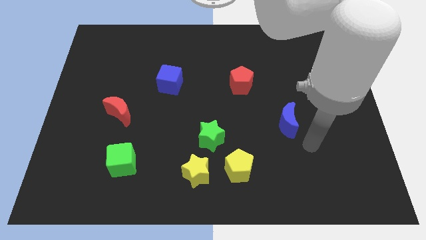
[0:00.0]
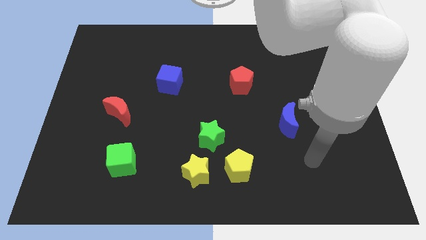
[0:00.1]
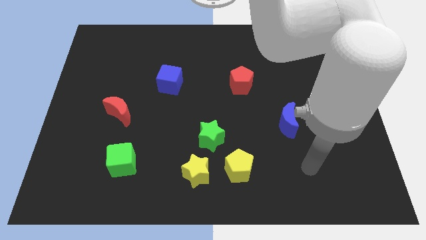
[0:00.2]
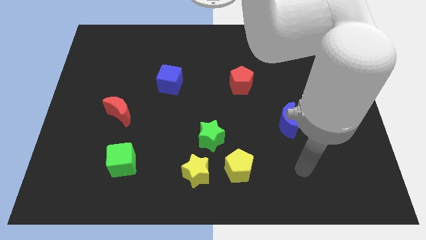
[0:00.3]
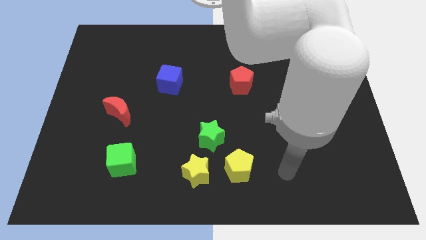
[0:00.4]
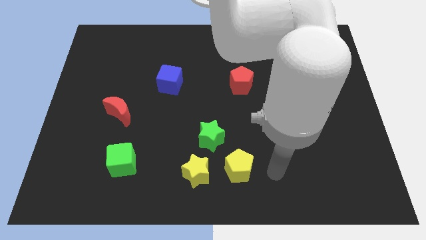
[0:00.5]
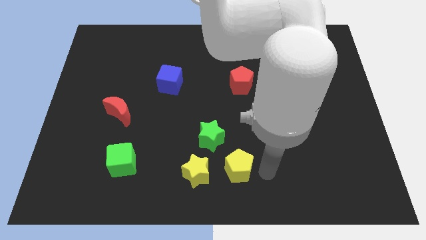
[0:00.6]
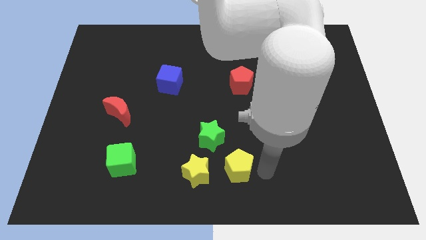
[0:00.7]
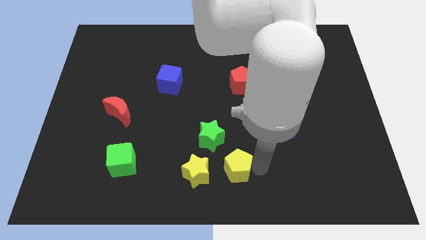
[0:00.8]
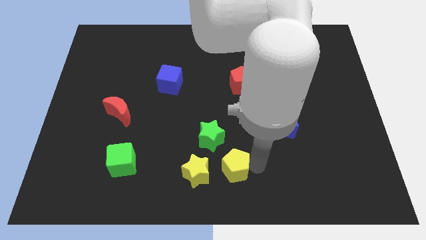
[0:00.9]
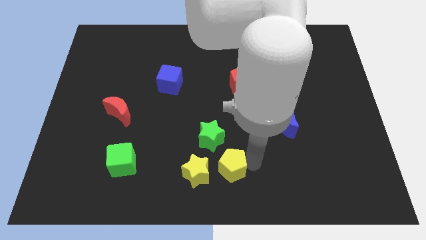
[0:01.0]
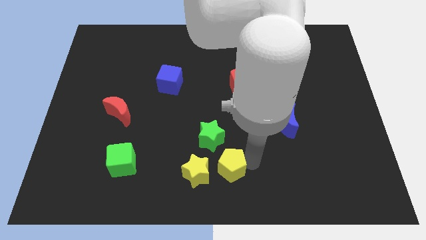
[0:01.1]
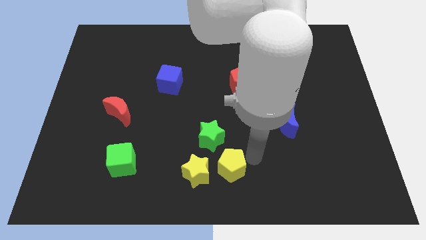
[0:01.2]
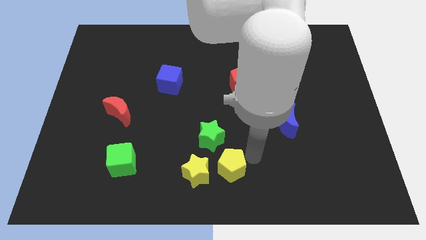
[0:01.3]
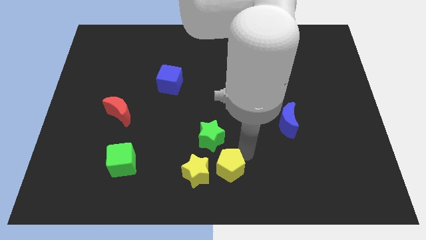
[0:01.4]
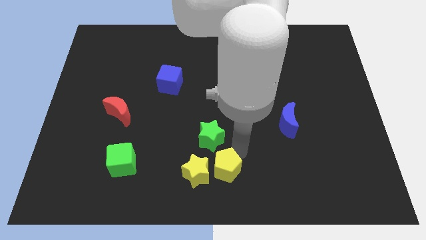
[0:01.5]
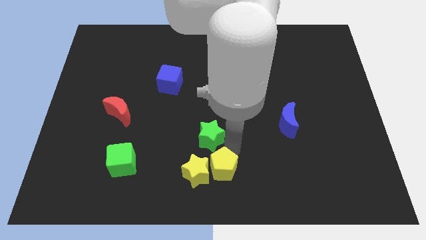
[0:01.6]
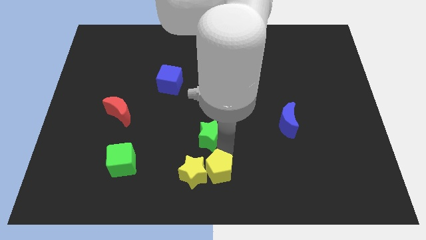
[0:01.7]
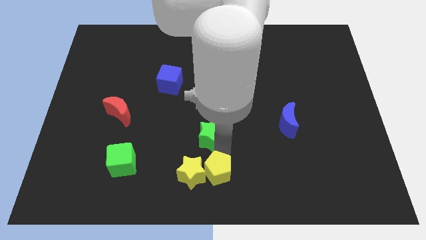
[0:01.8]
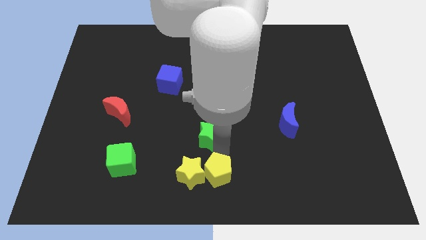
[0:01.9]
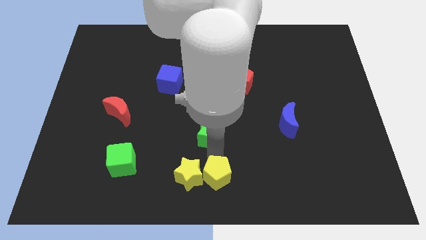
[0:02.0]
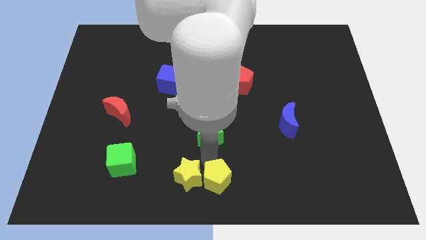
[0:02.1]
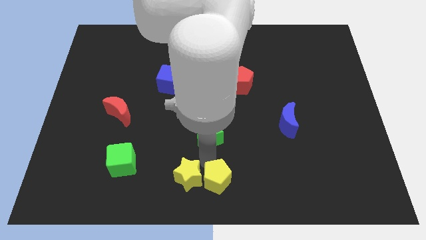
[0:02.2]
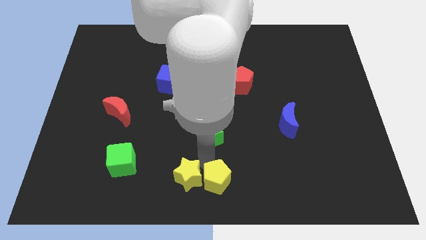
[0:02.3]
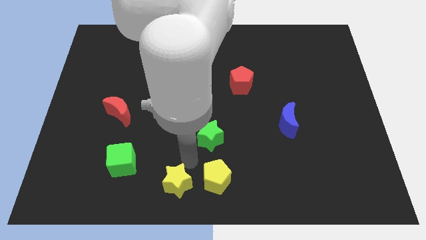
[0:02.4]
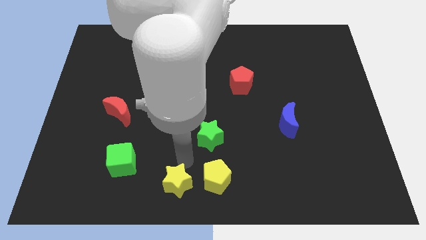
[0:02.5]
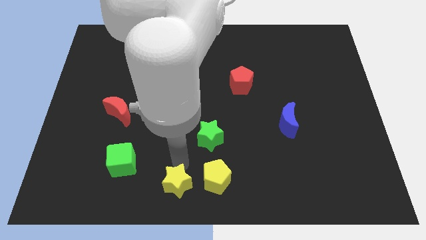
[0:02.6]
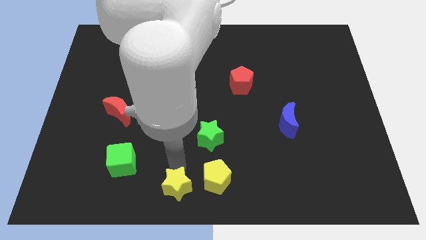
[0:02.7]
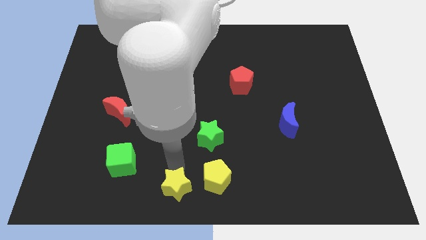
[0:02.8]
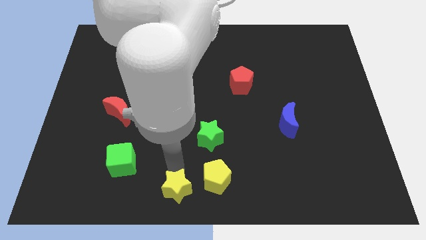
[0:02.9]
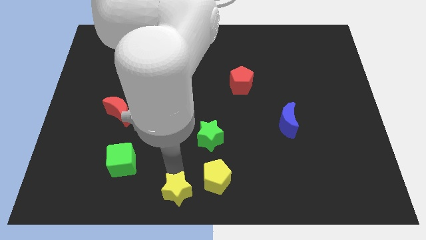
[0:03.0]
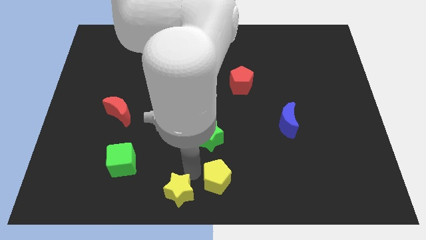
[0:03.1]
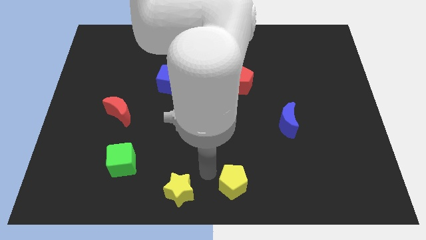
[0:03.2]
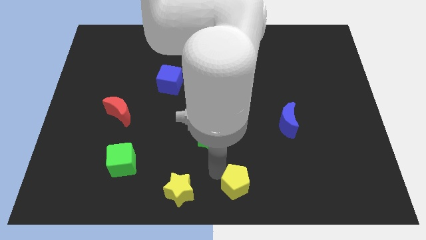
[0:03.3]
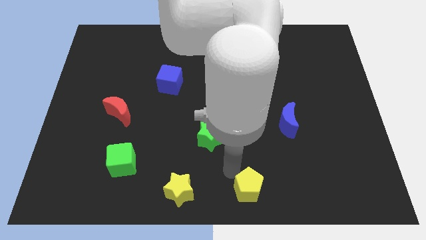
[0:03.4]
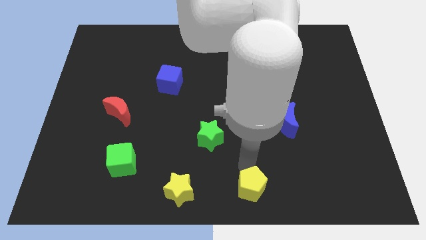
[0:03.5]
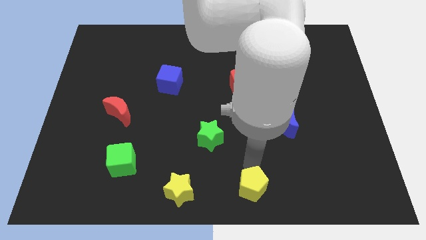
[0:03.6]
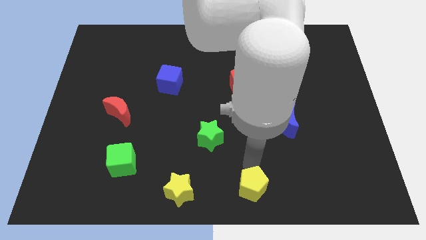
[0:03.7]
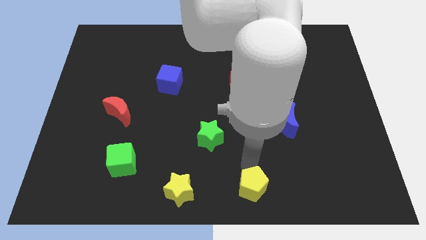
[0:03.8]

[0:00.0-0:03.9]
move the yellow star and pentagon apart

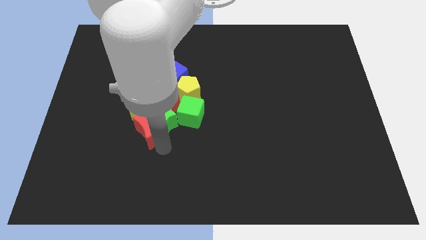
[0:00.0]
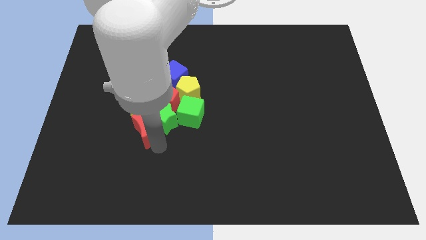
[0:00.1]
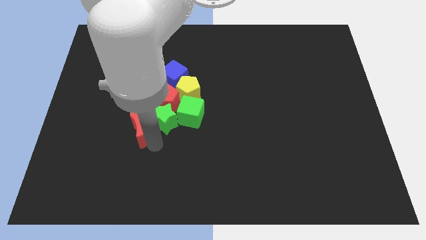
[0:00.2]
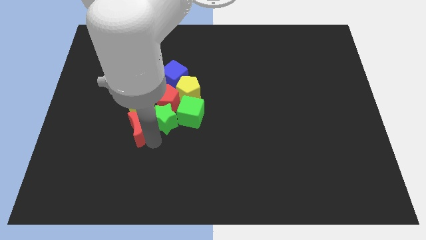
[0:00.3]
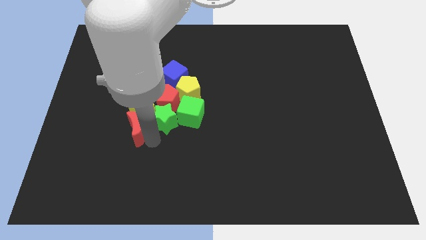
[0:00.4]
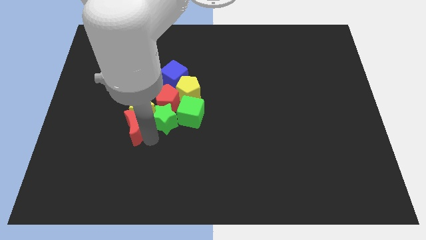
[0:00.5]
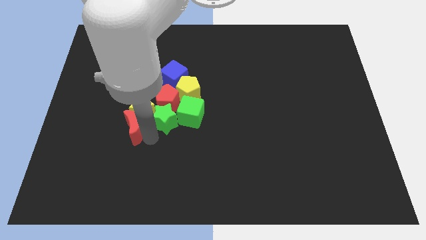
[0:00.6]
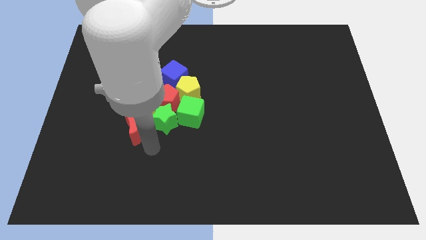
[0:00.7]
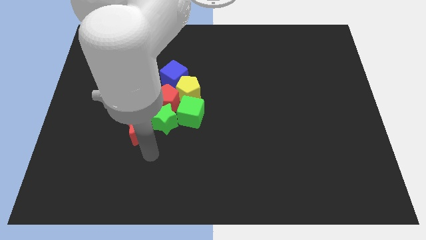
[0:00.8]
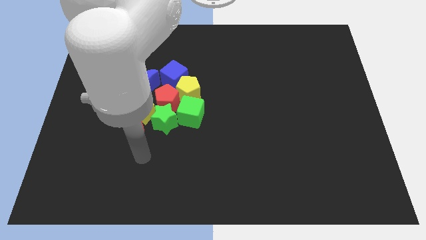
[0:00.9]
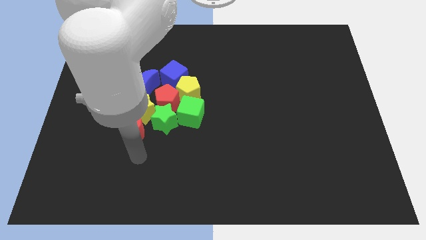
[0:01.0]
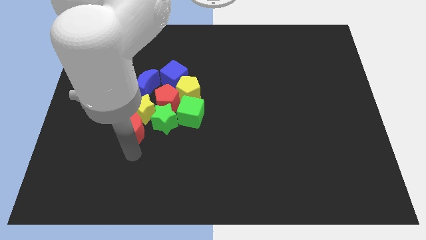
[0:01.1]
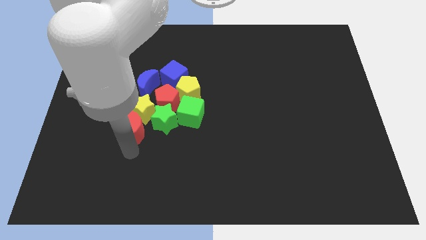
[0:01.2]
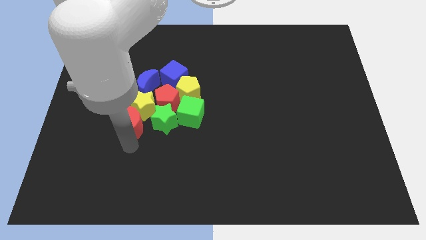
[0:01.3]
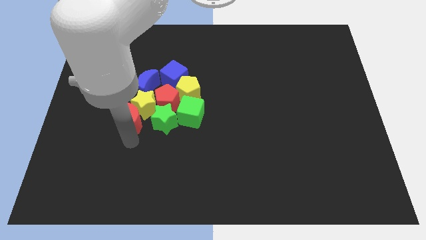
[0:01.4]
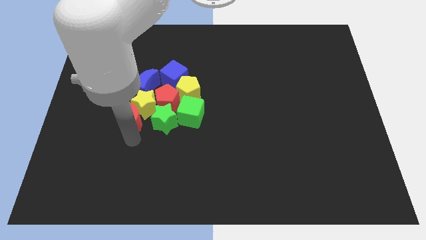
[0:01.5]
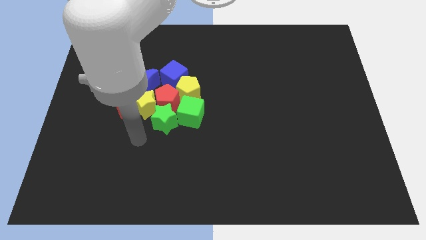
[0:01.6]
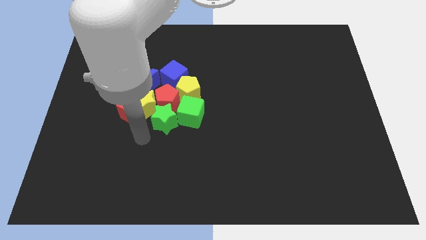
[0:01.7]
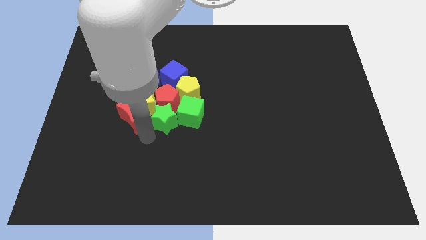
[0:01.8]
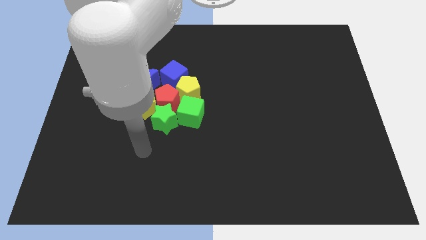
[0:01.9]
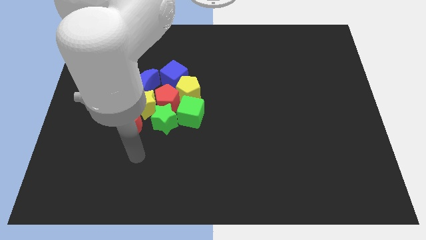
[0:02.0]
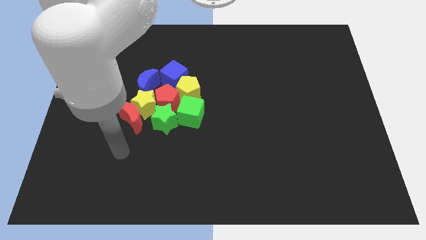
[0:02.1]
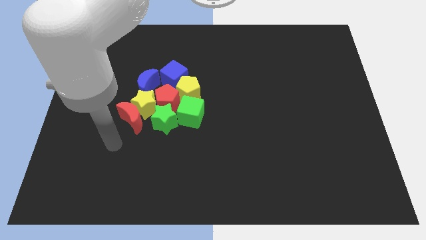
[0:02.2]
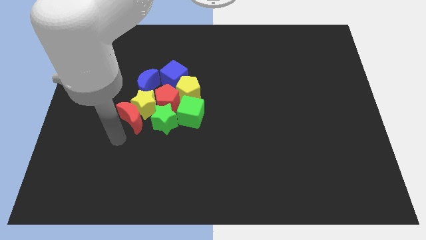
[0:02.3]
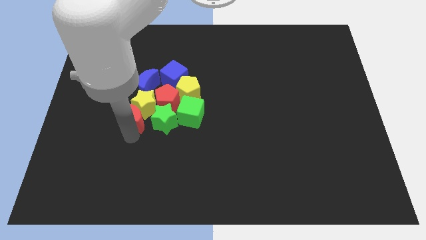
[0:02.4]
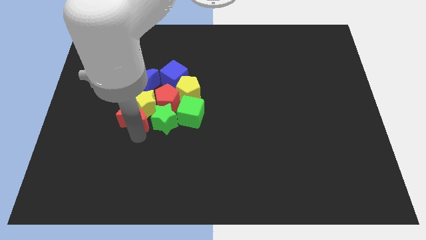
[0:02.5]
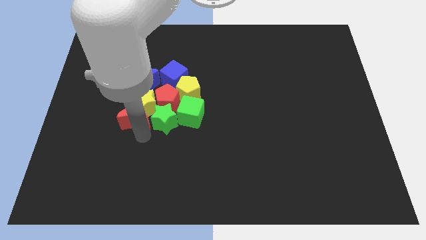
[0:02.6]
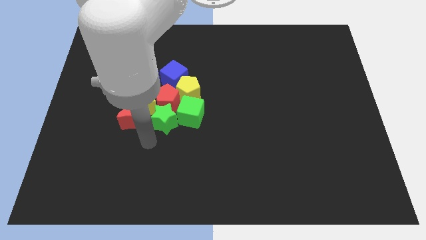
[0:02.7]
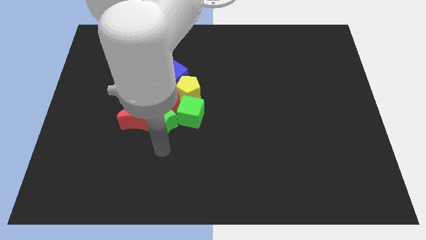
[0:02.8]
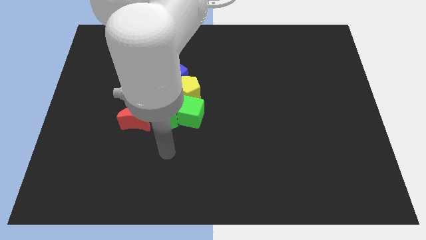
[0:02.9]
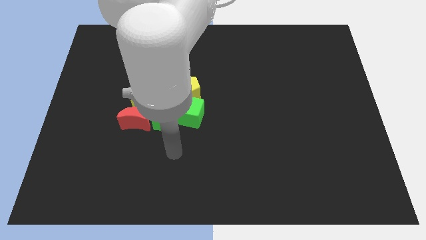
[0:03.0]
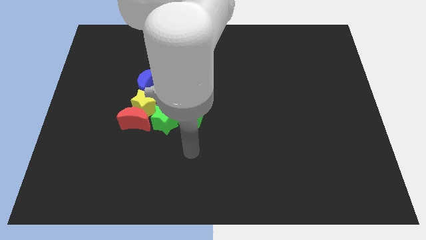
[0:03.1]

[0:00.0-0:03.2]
push the red crescent slightly to the left

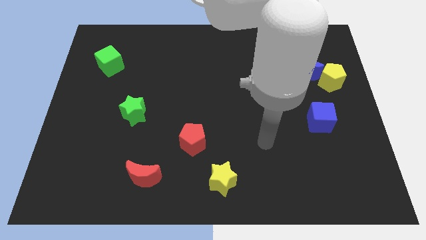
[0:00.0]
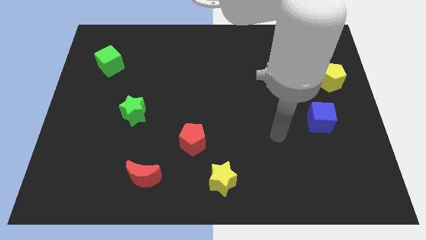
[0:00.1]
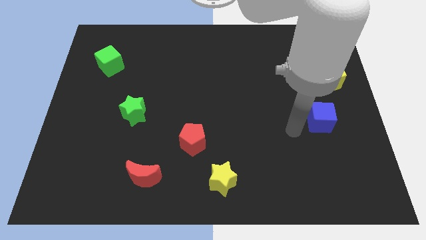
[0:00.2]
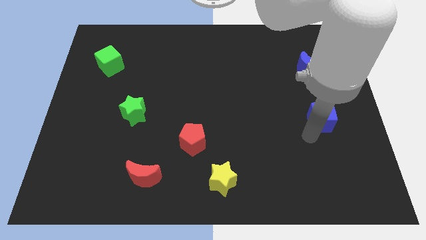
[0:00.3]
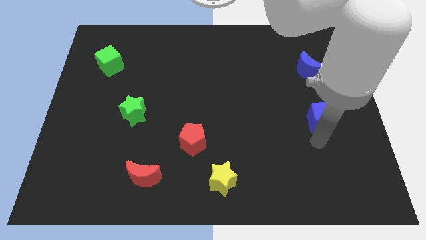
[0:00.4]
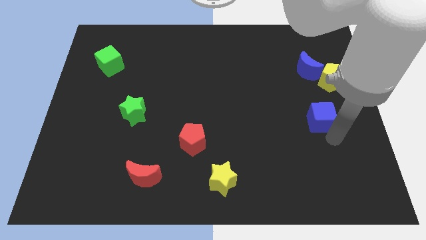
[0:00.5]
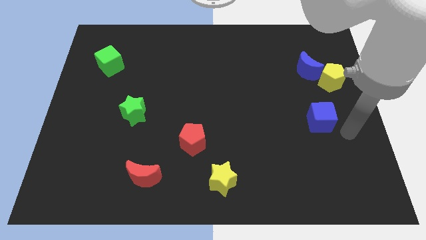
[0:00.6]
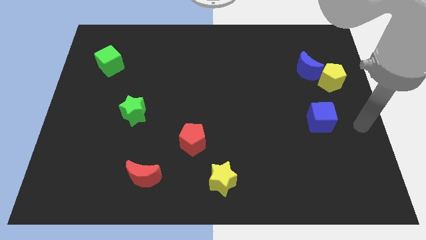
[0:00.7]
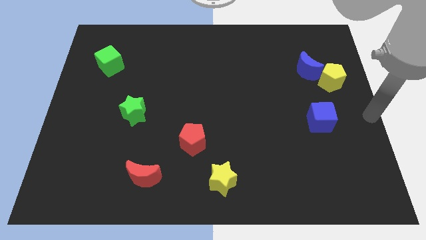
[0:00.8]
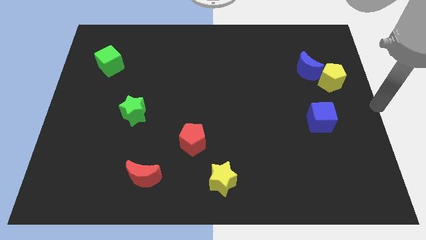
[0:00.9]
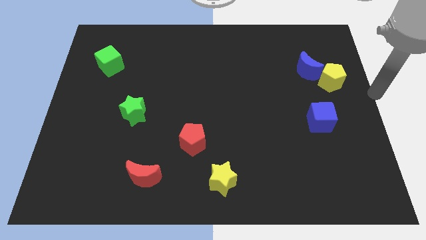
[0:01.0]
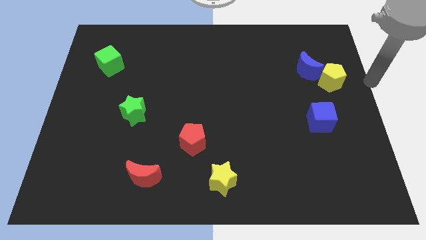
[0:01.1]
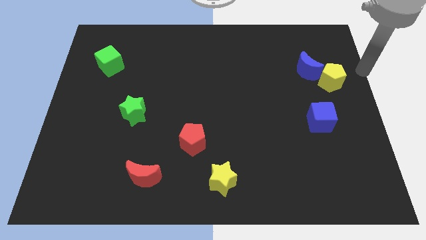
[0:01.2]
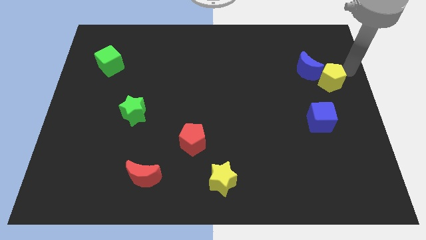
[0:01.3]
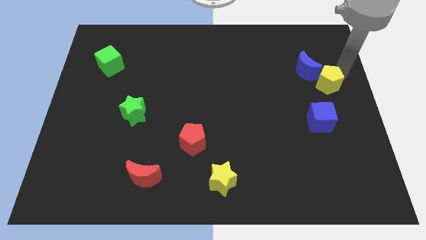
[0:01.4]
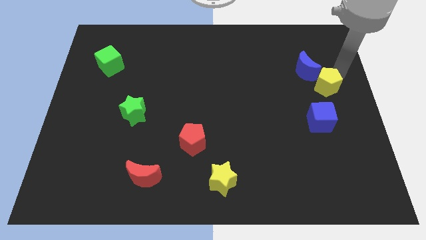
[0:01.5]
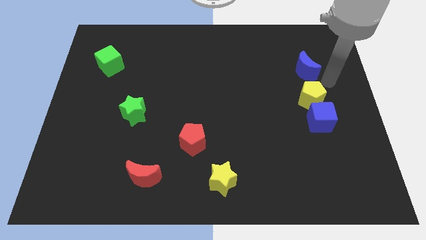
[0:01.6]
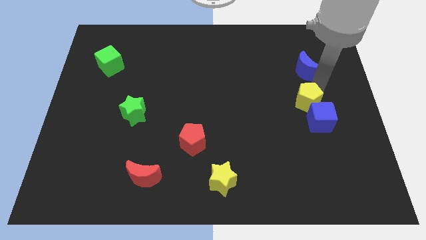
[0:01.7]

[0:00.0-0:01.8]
place the yellow pentagon above the blue cube
